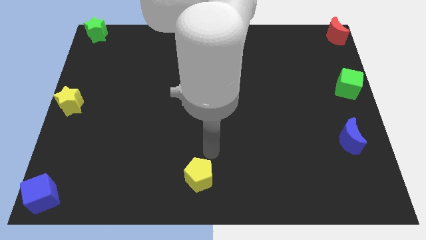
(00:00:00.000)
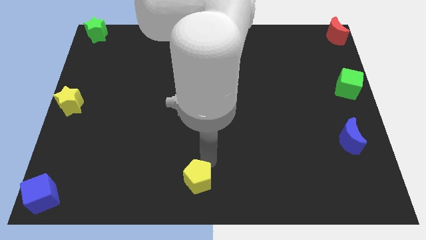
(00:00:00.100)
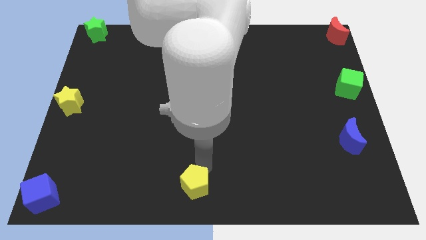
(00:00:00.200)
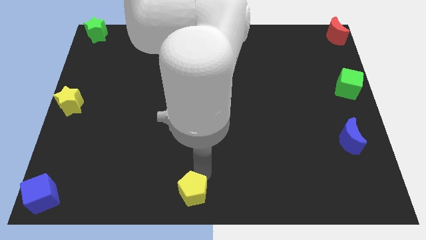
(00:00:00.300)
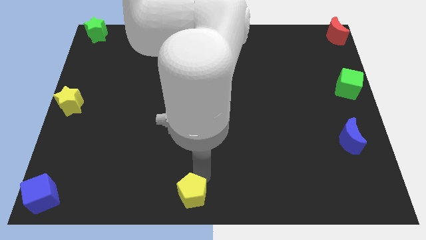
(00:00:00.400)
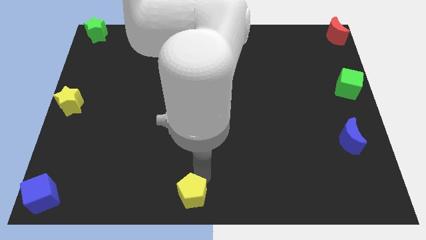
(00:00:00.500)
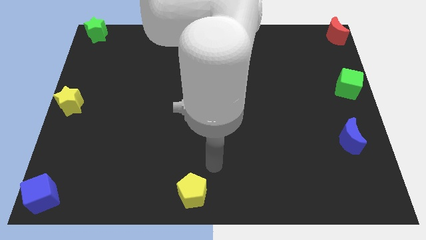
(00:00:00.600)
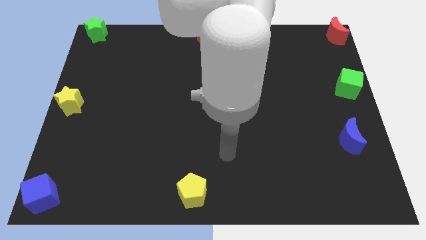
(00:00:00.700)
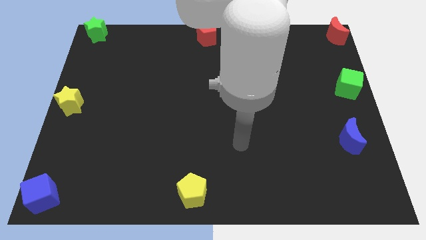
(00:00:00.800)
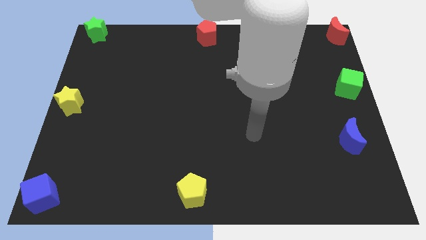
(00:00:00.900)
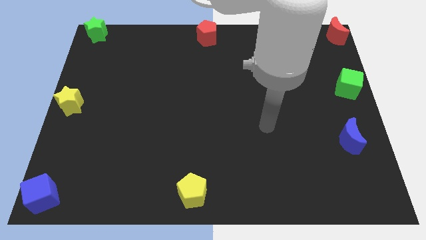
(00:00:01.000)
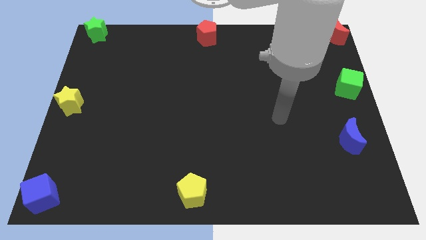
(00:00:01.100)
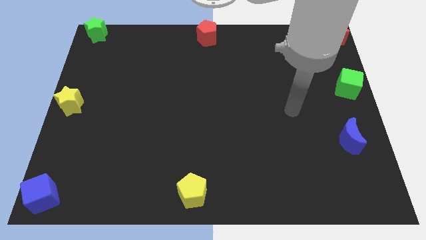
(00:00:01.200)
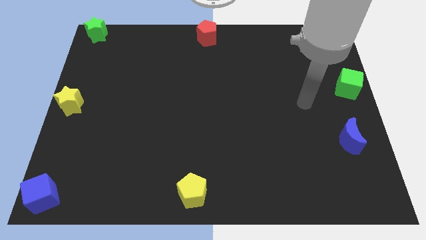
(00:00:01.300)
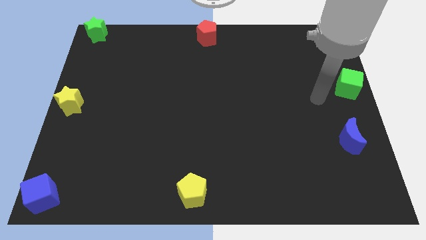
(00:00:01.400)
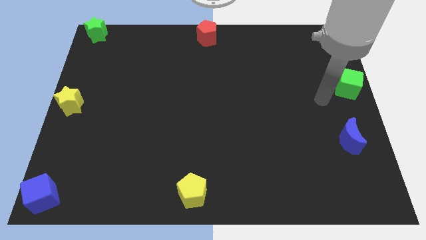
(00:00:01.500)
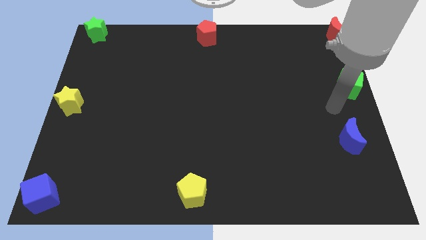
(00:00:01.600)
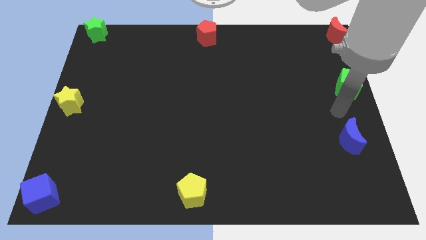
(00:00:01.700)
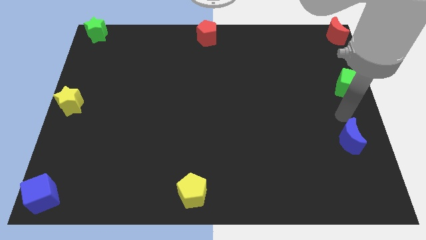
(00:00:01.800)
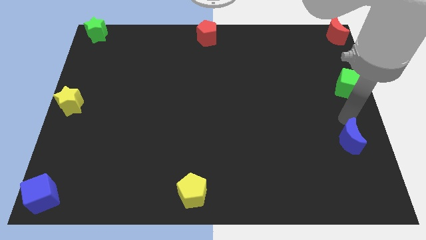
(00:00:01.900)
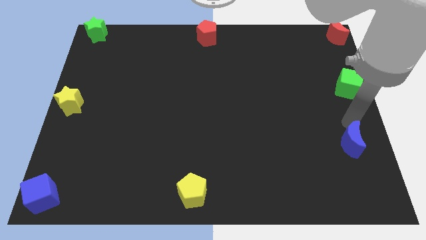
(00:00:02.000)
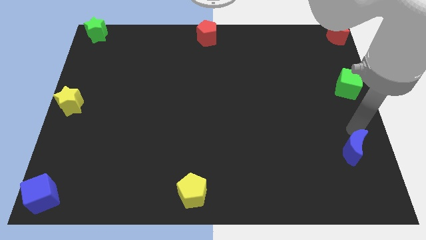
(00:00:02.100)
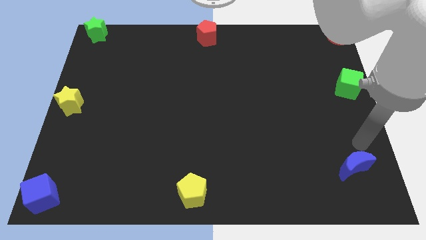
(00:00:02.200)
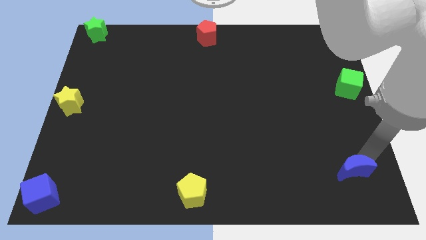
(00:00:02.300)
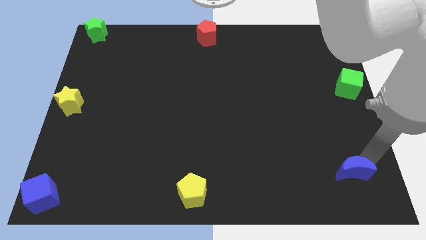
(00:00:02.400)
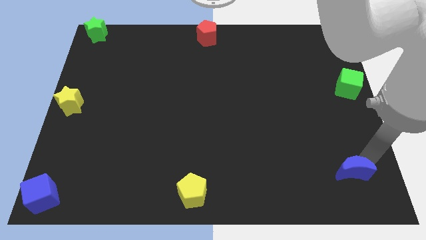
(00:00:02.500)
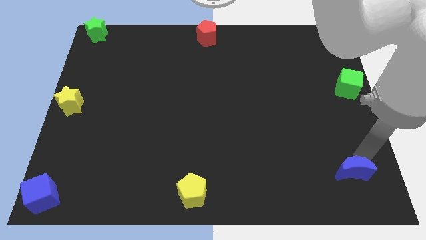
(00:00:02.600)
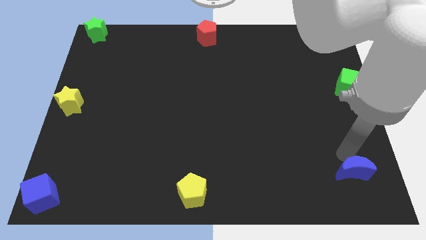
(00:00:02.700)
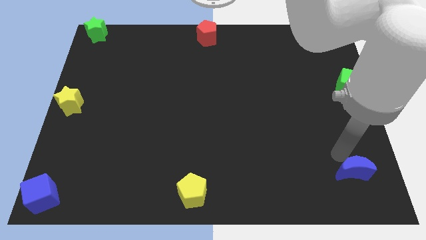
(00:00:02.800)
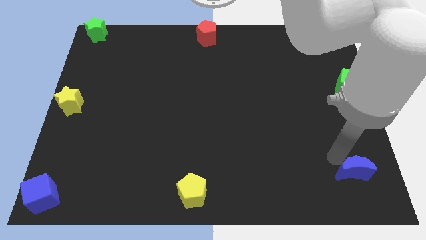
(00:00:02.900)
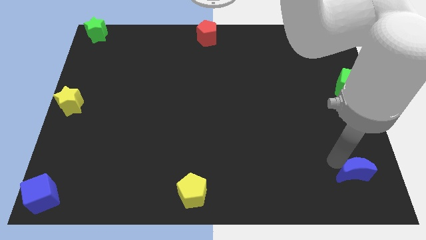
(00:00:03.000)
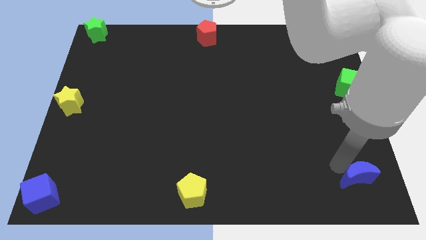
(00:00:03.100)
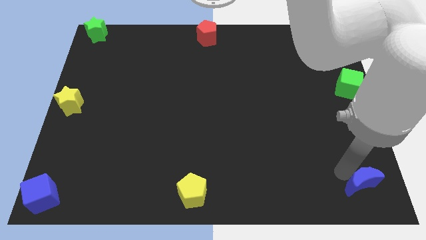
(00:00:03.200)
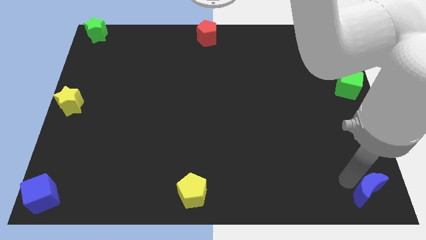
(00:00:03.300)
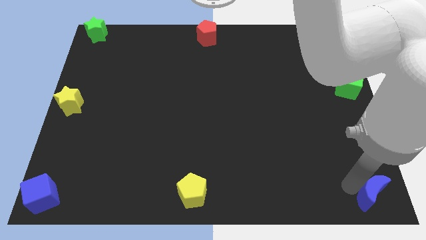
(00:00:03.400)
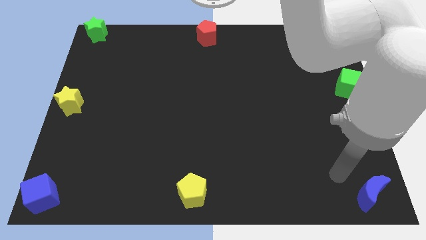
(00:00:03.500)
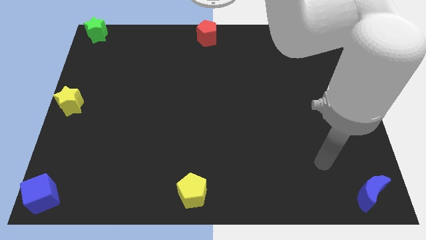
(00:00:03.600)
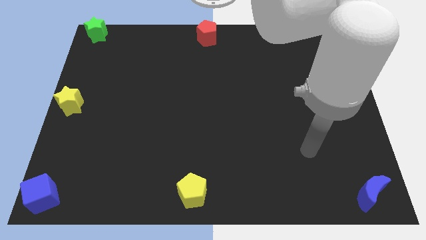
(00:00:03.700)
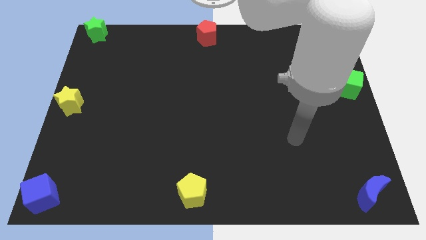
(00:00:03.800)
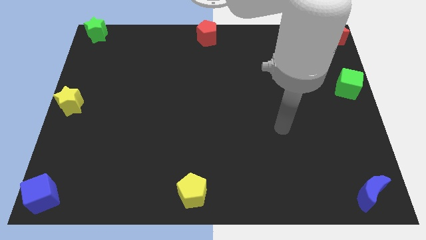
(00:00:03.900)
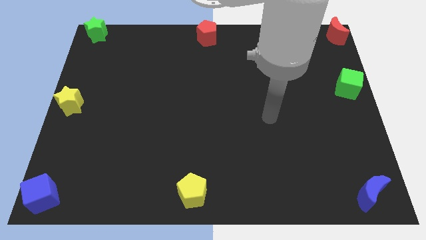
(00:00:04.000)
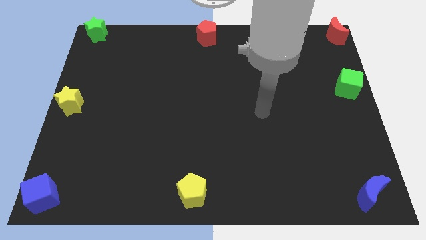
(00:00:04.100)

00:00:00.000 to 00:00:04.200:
move blue moon to the bottom right

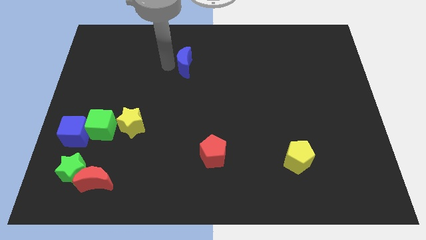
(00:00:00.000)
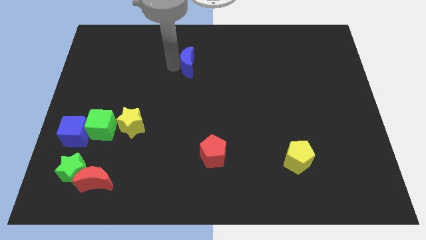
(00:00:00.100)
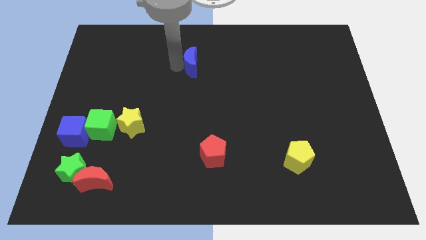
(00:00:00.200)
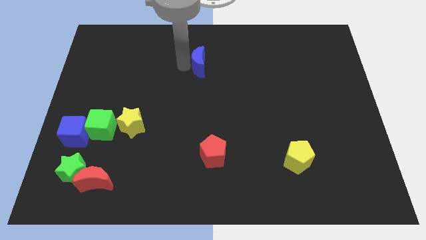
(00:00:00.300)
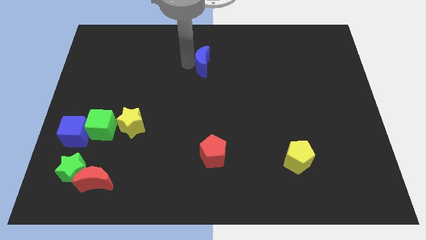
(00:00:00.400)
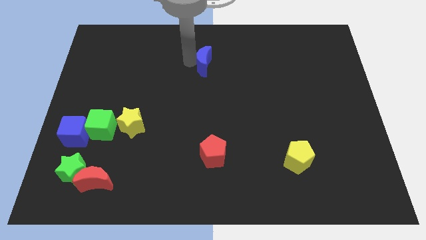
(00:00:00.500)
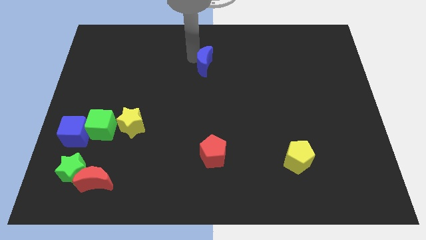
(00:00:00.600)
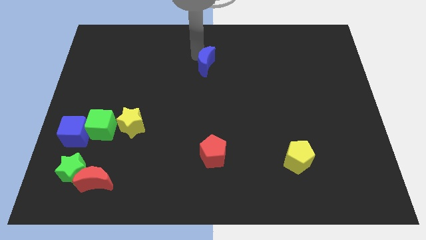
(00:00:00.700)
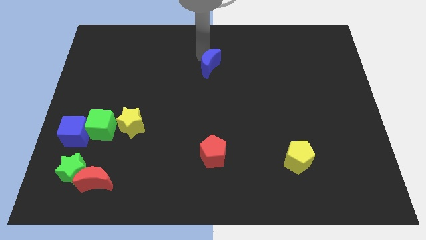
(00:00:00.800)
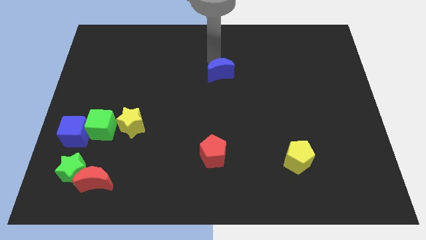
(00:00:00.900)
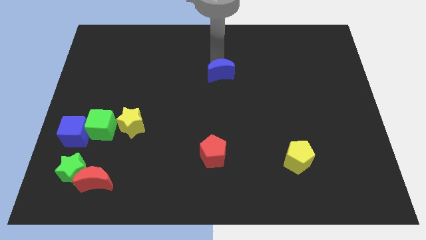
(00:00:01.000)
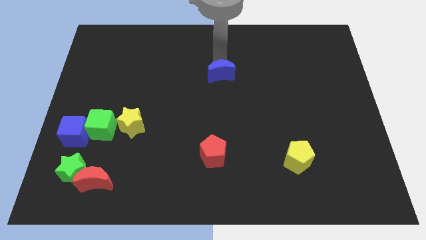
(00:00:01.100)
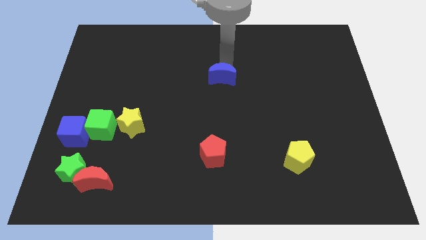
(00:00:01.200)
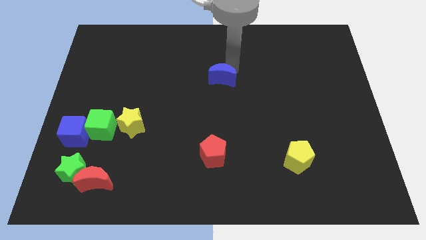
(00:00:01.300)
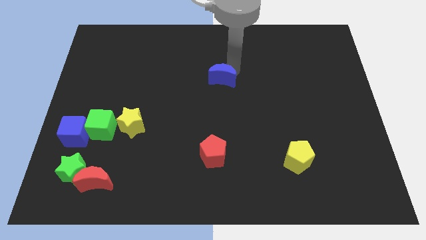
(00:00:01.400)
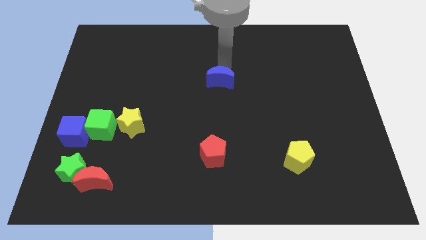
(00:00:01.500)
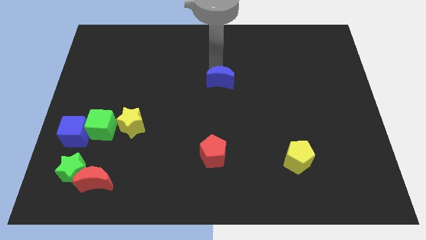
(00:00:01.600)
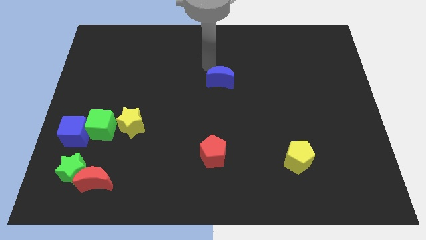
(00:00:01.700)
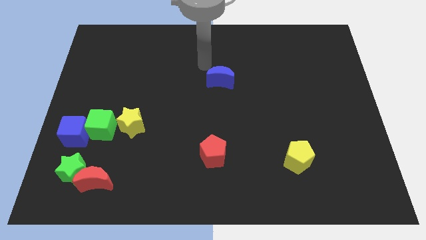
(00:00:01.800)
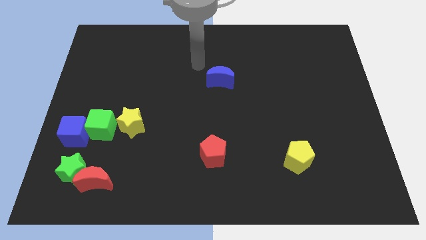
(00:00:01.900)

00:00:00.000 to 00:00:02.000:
place the blue crescent at the top side of the red pentagon

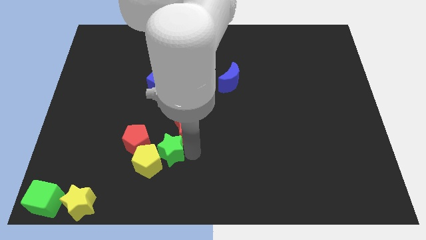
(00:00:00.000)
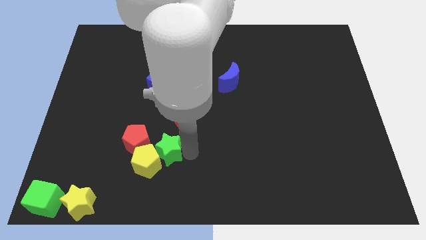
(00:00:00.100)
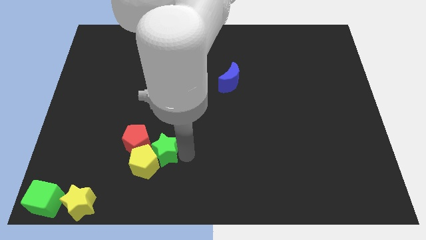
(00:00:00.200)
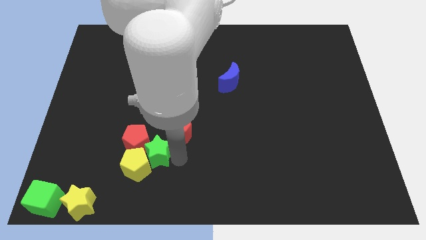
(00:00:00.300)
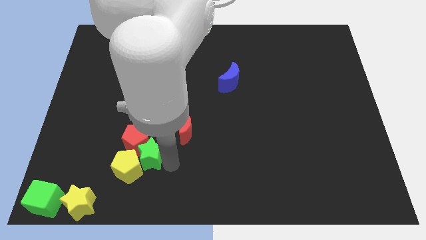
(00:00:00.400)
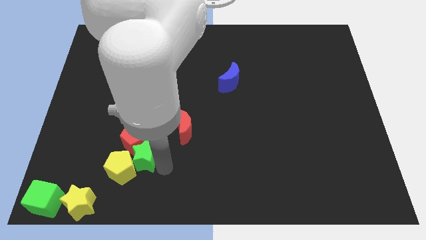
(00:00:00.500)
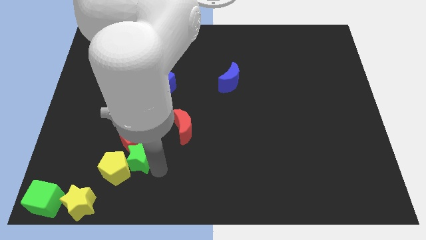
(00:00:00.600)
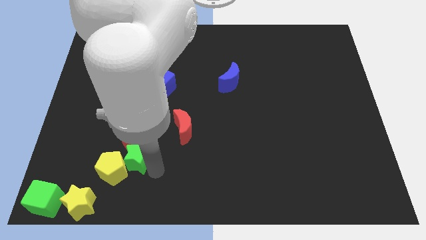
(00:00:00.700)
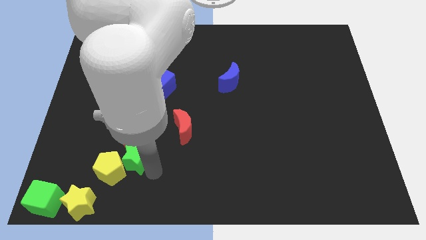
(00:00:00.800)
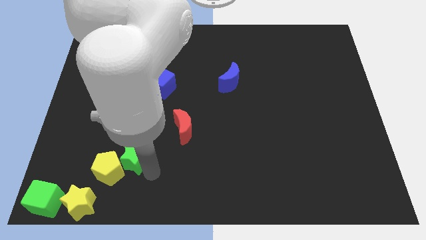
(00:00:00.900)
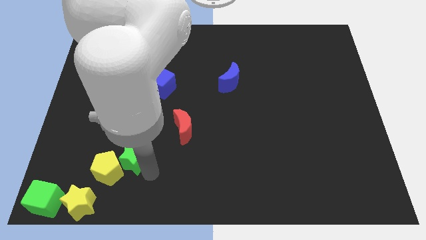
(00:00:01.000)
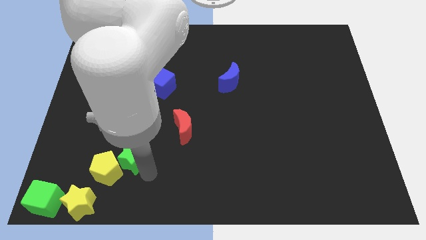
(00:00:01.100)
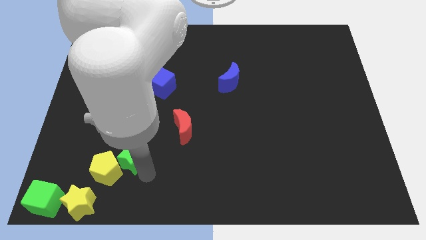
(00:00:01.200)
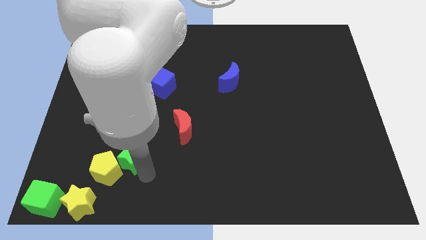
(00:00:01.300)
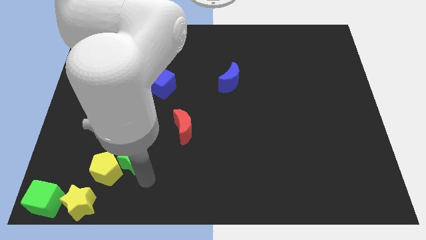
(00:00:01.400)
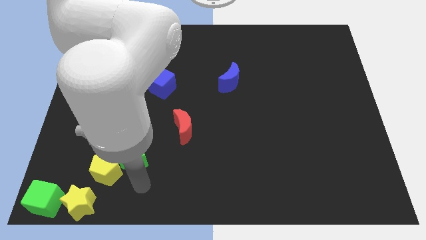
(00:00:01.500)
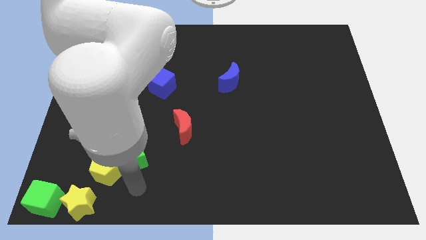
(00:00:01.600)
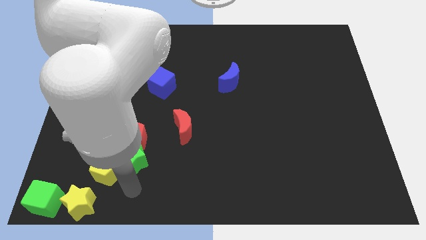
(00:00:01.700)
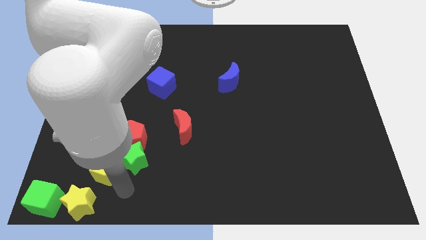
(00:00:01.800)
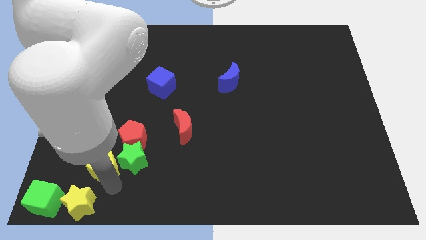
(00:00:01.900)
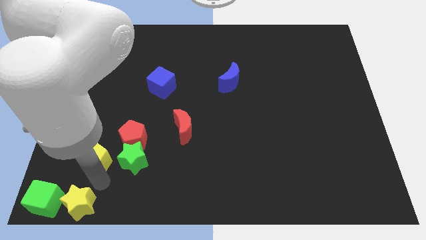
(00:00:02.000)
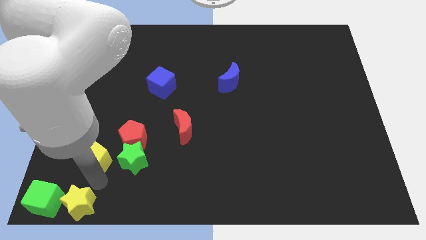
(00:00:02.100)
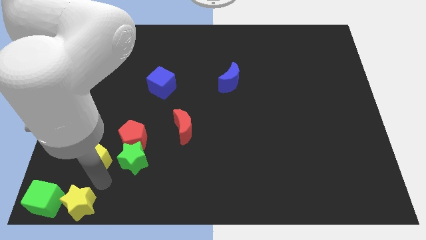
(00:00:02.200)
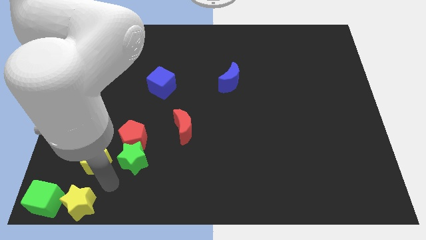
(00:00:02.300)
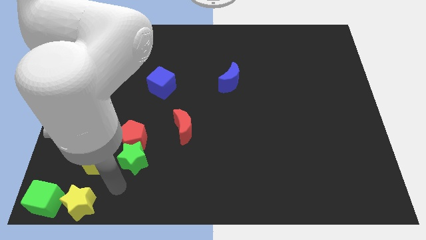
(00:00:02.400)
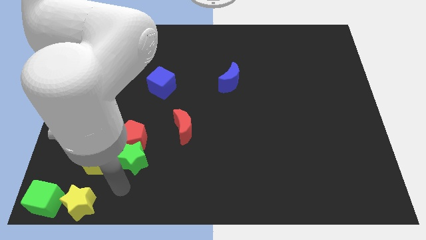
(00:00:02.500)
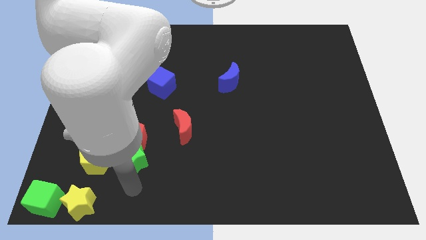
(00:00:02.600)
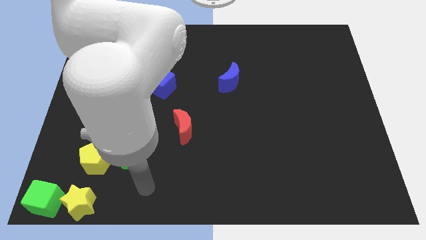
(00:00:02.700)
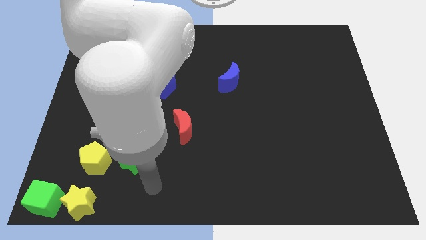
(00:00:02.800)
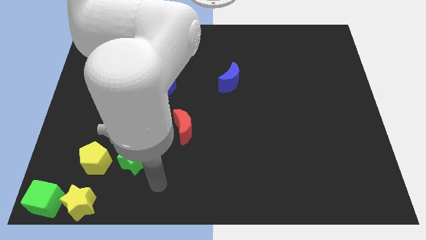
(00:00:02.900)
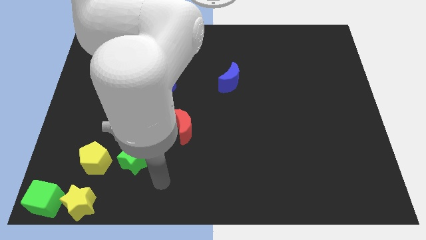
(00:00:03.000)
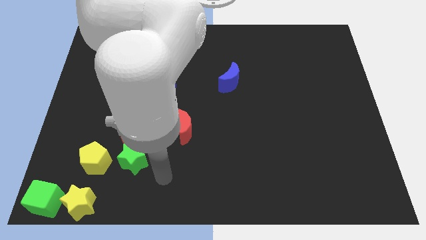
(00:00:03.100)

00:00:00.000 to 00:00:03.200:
separate yellow pentagon from green star
